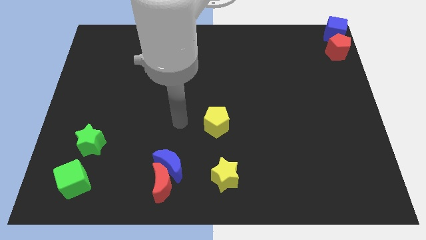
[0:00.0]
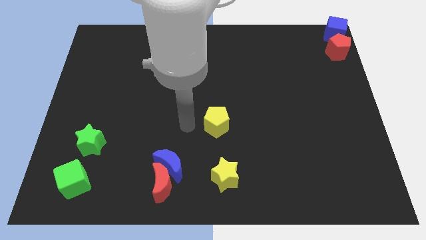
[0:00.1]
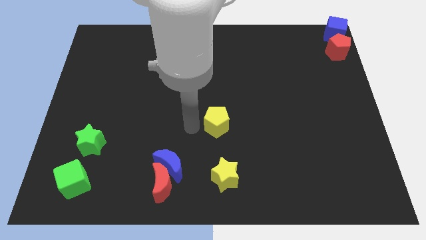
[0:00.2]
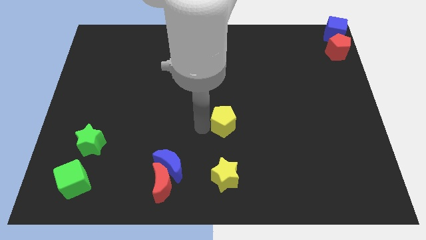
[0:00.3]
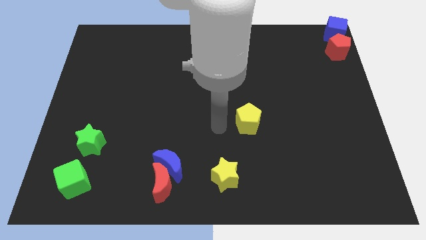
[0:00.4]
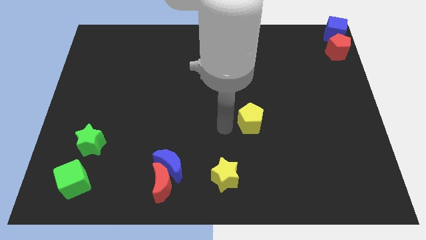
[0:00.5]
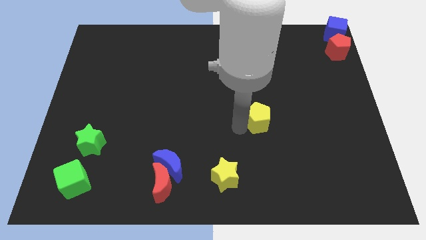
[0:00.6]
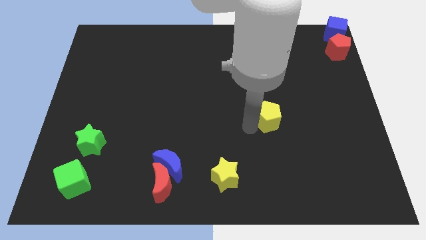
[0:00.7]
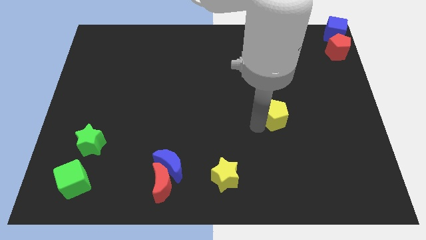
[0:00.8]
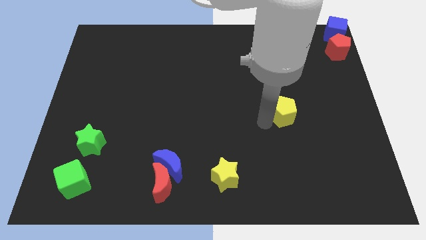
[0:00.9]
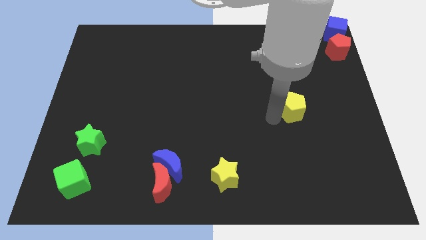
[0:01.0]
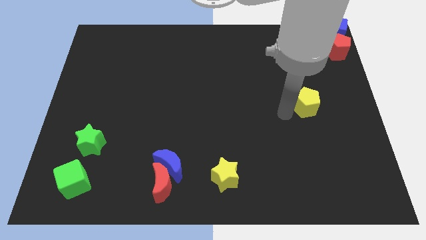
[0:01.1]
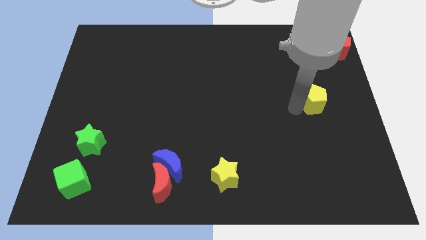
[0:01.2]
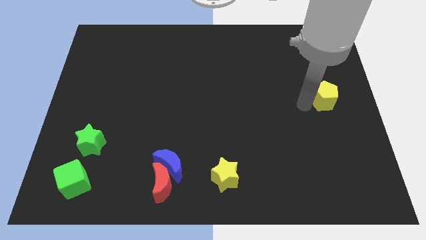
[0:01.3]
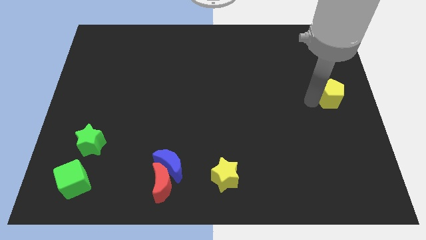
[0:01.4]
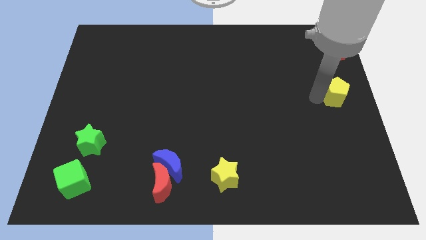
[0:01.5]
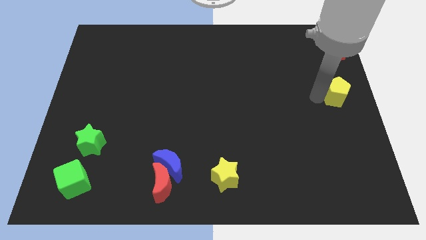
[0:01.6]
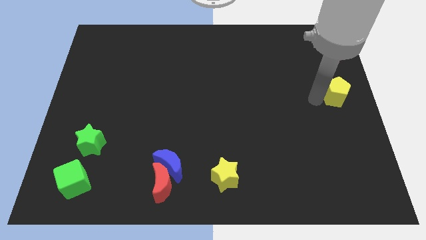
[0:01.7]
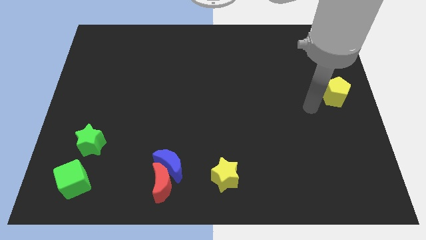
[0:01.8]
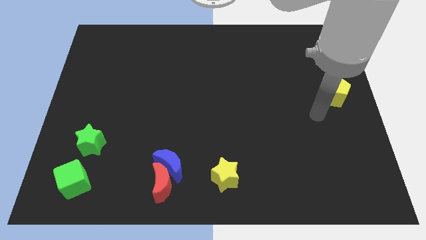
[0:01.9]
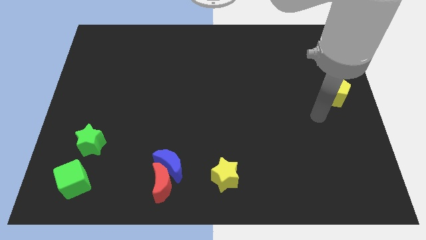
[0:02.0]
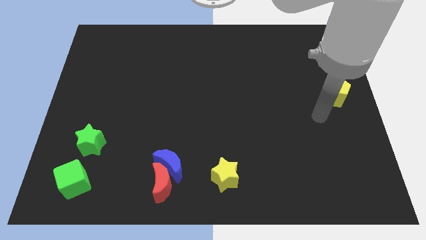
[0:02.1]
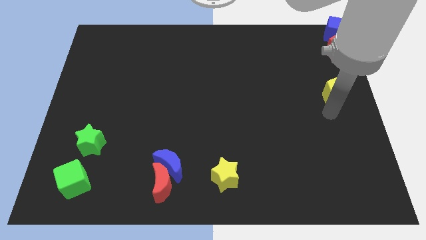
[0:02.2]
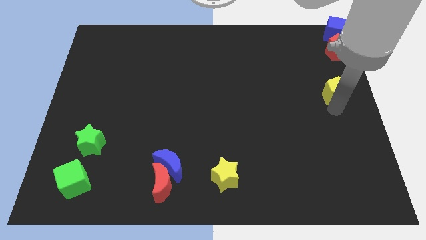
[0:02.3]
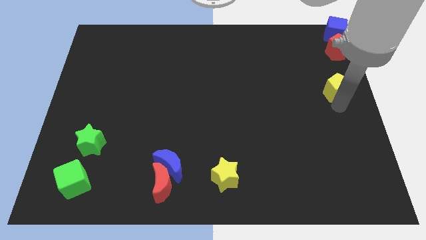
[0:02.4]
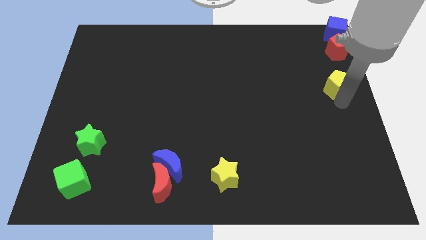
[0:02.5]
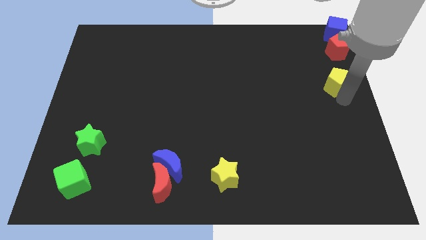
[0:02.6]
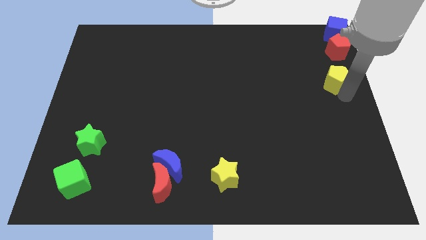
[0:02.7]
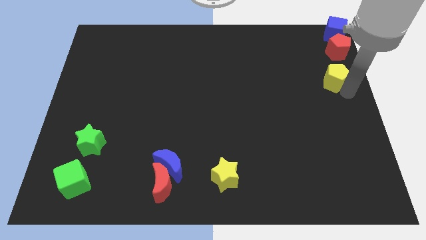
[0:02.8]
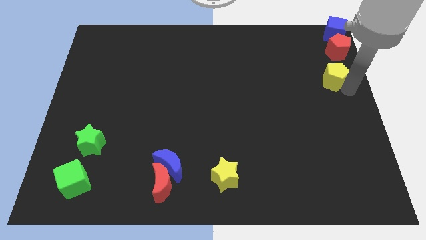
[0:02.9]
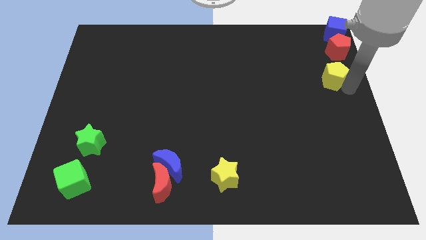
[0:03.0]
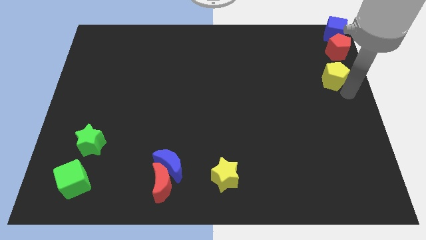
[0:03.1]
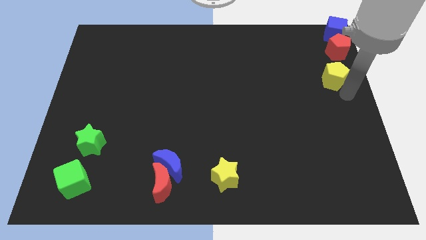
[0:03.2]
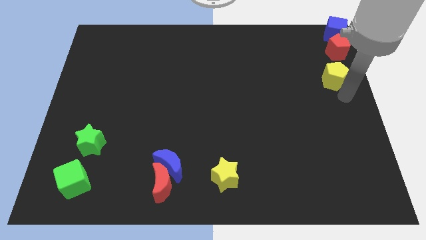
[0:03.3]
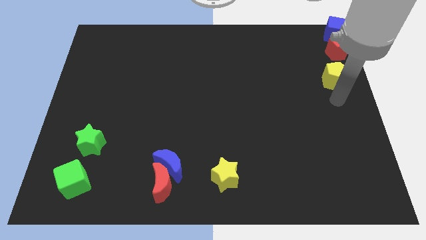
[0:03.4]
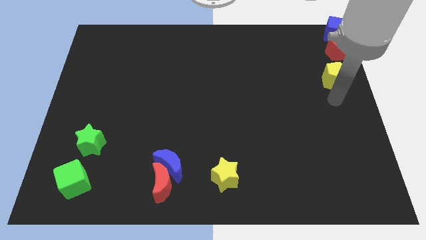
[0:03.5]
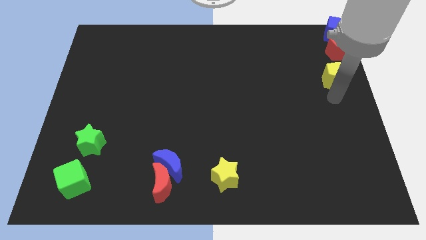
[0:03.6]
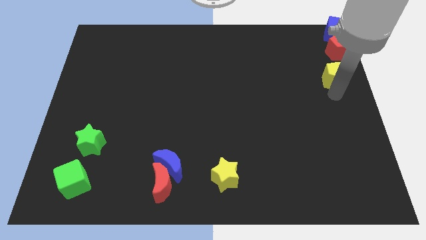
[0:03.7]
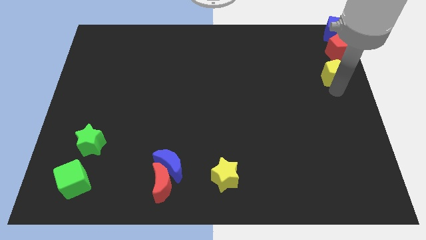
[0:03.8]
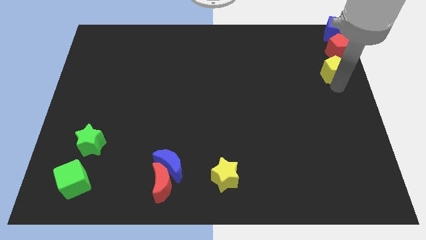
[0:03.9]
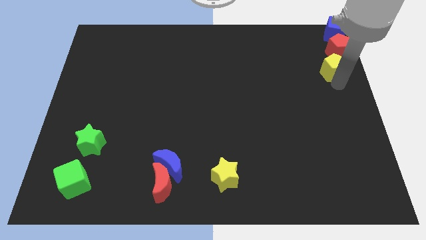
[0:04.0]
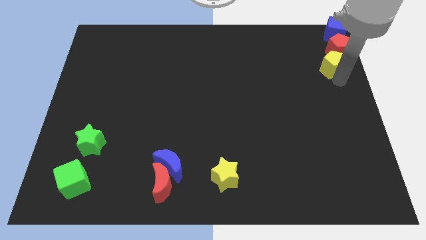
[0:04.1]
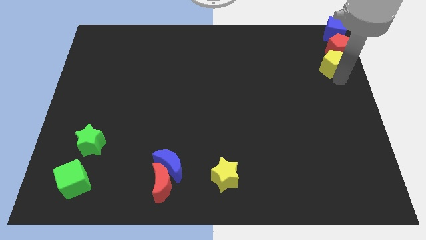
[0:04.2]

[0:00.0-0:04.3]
place the yellow pentagon at the bottom of red pentagon

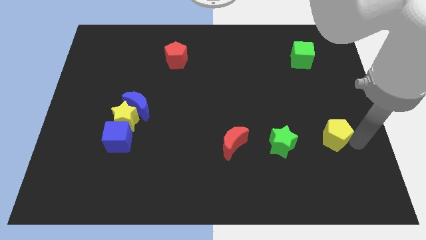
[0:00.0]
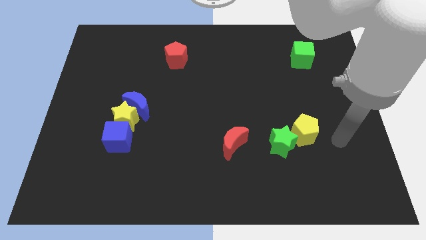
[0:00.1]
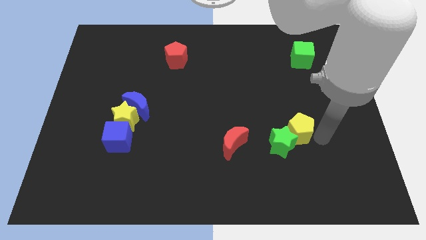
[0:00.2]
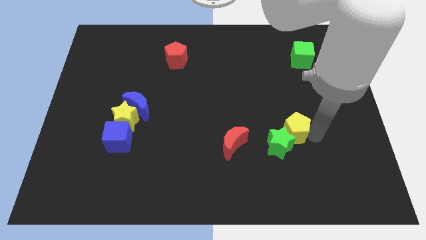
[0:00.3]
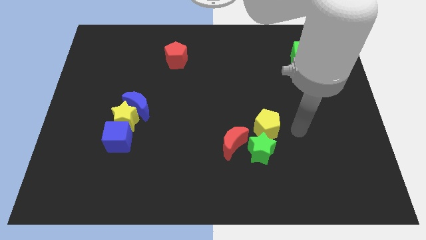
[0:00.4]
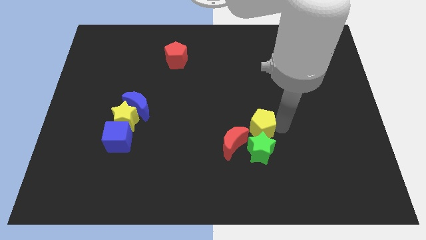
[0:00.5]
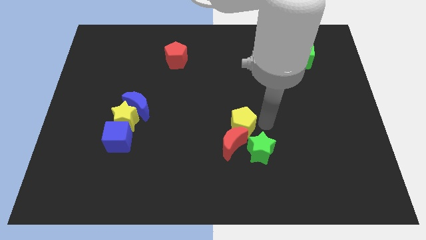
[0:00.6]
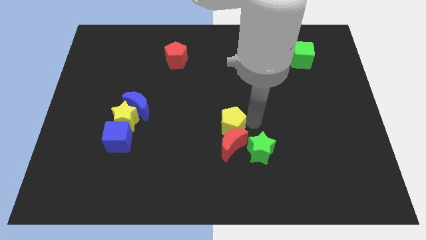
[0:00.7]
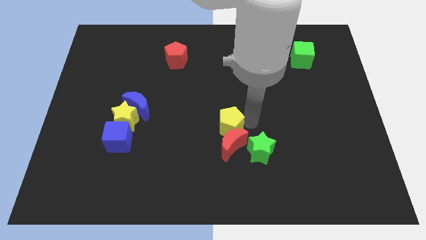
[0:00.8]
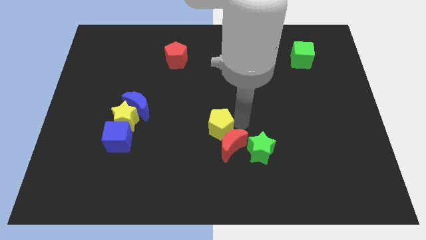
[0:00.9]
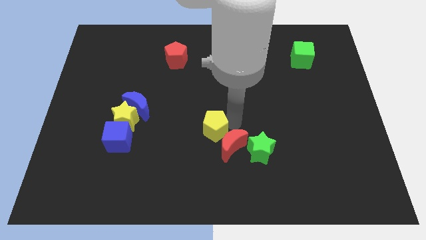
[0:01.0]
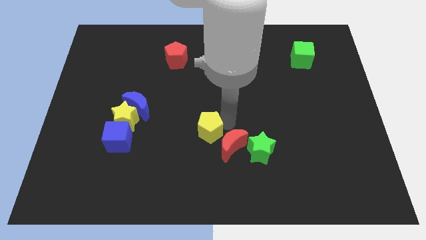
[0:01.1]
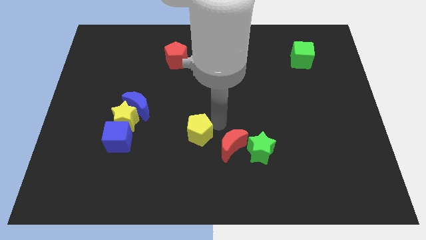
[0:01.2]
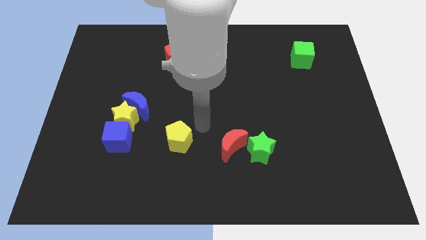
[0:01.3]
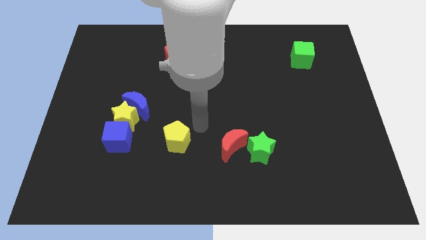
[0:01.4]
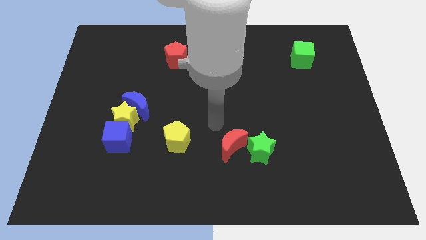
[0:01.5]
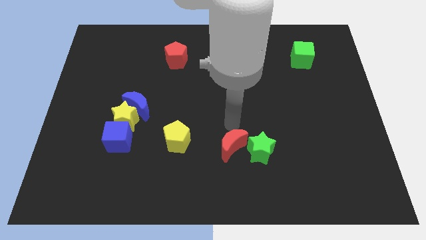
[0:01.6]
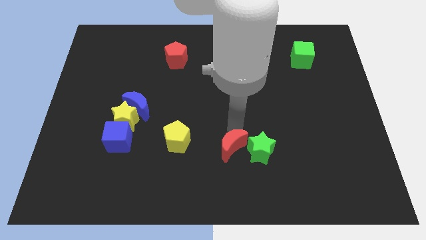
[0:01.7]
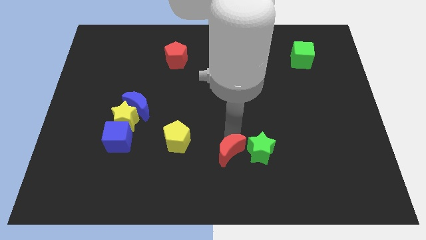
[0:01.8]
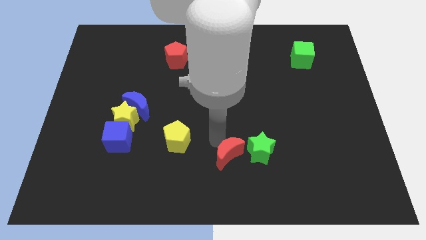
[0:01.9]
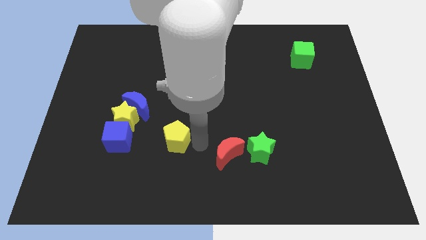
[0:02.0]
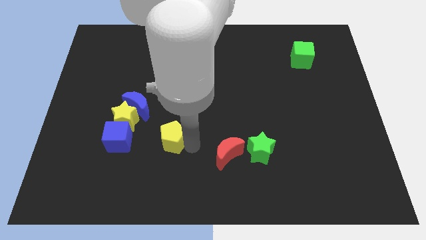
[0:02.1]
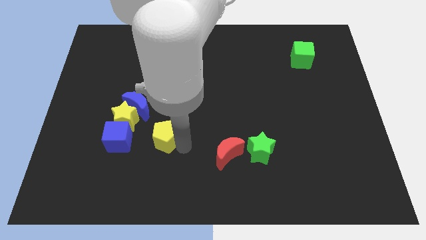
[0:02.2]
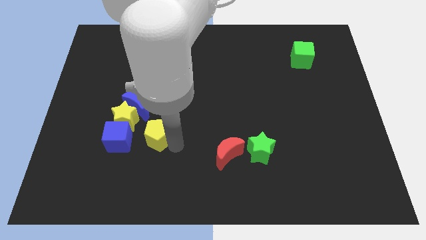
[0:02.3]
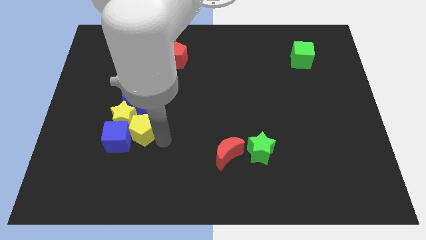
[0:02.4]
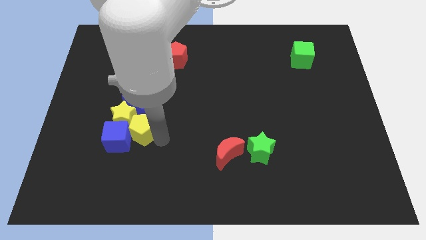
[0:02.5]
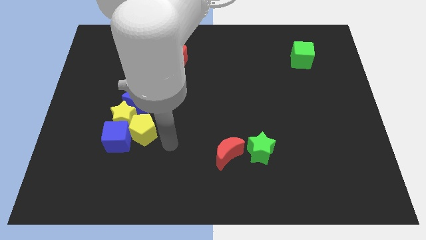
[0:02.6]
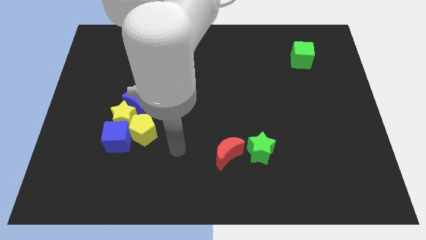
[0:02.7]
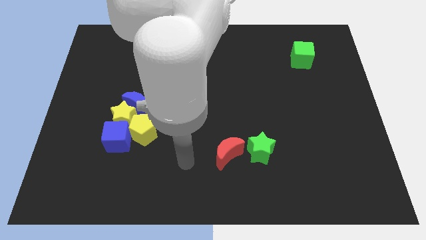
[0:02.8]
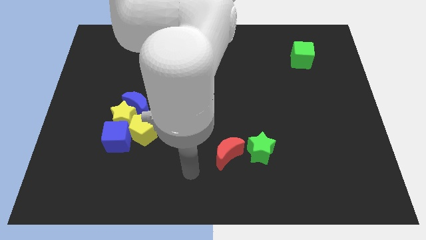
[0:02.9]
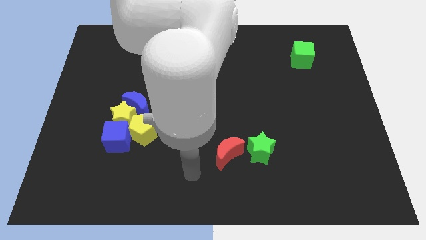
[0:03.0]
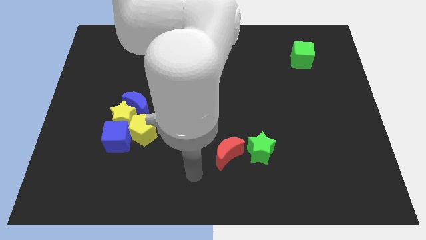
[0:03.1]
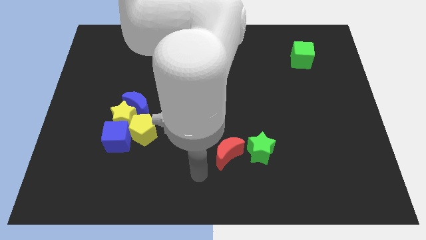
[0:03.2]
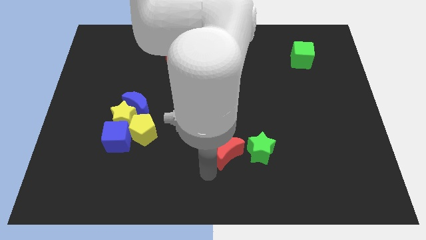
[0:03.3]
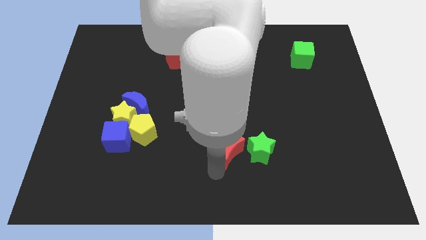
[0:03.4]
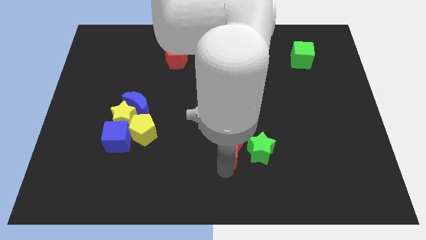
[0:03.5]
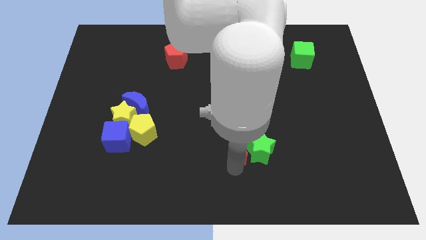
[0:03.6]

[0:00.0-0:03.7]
move the yellow pentagon into the group of blocks

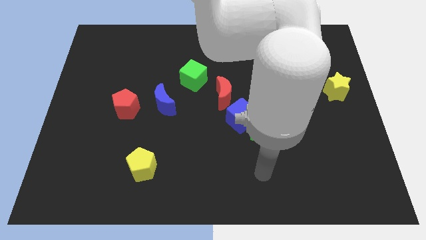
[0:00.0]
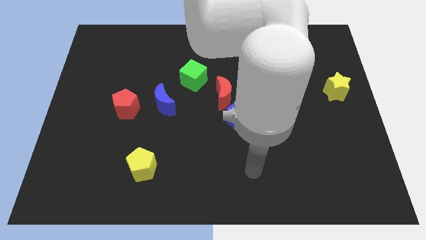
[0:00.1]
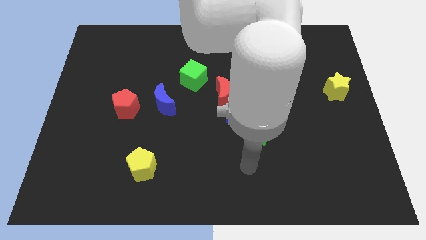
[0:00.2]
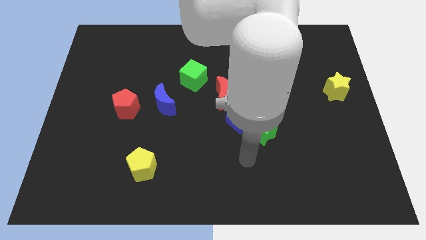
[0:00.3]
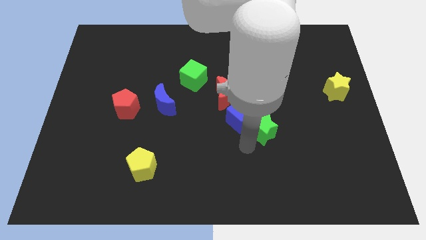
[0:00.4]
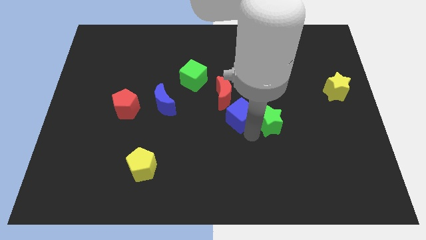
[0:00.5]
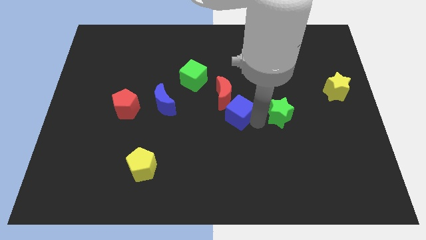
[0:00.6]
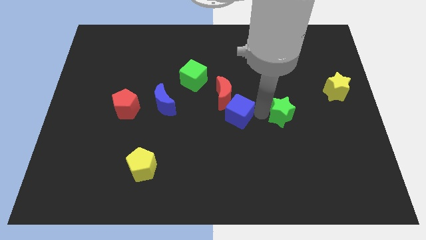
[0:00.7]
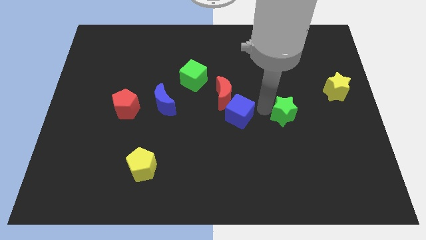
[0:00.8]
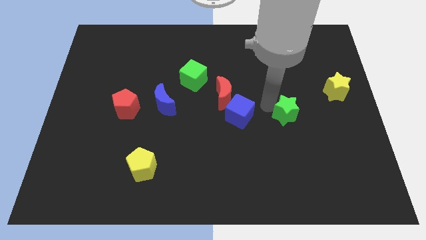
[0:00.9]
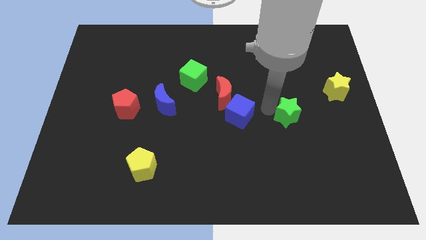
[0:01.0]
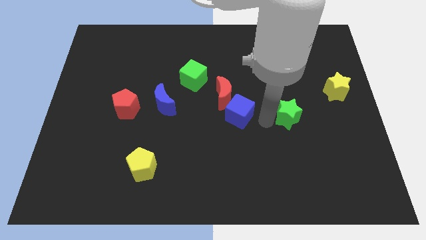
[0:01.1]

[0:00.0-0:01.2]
move green star diagonally bottom left of the yellow star
